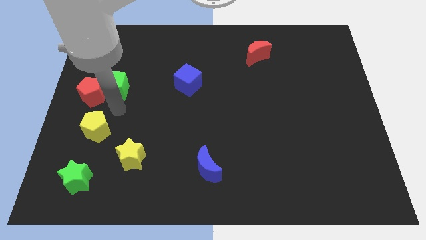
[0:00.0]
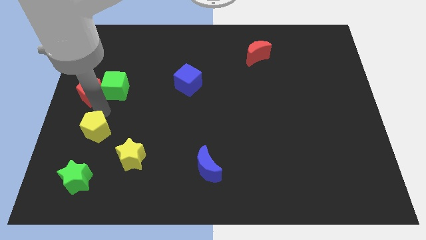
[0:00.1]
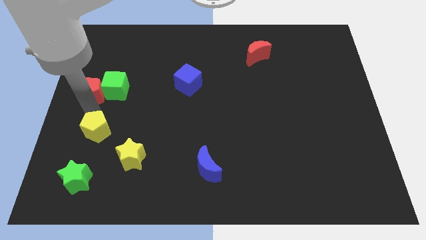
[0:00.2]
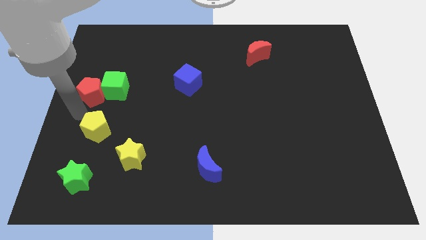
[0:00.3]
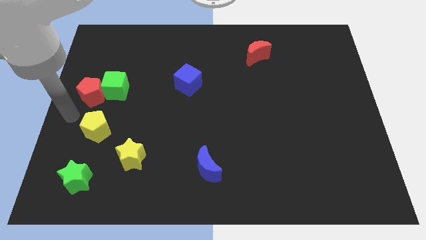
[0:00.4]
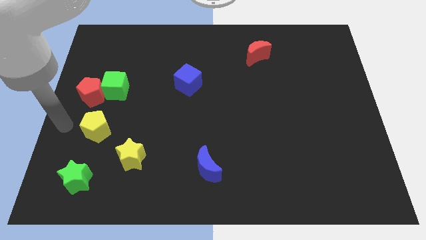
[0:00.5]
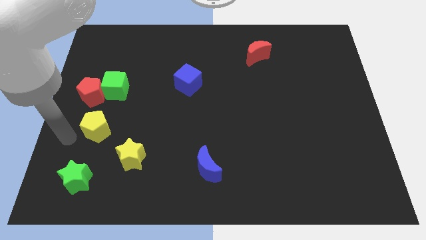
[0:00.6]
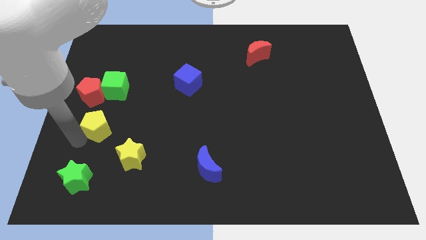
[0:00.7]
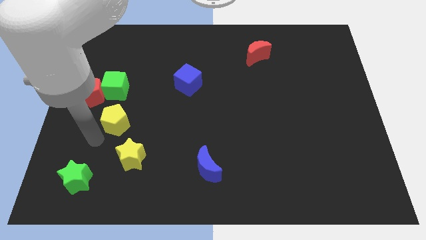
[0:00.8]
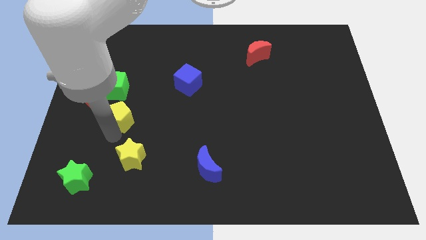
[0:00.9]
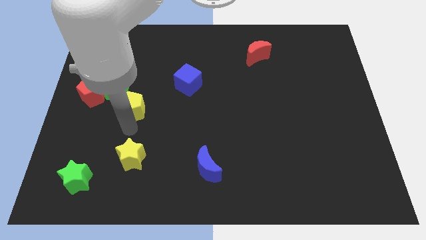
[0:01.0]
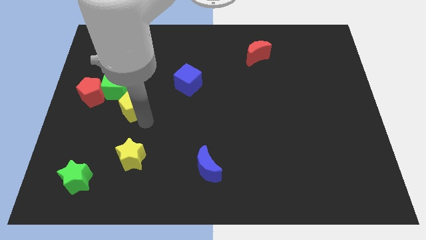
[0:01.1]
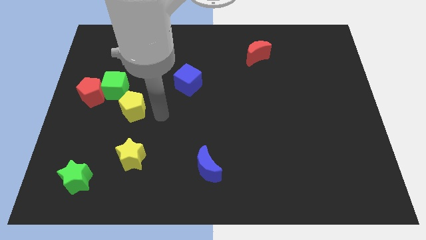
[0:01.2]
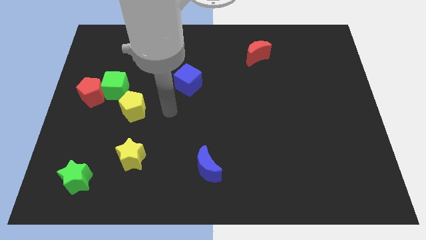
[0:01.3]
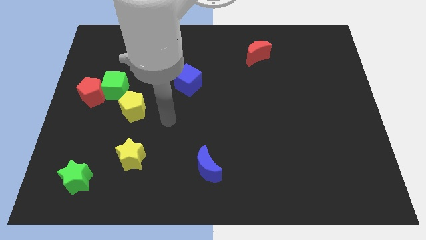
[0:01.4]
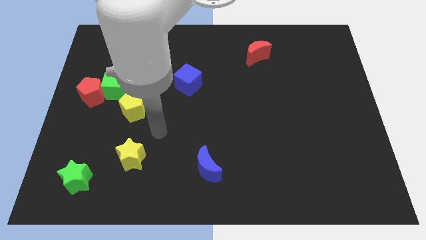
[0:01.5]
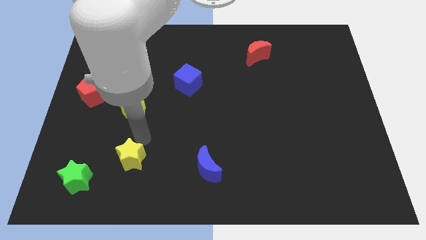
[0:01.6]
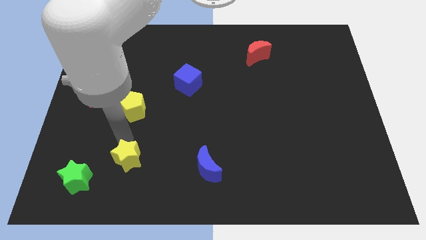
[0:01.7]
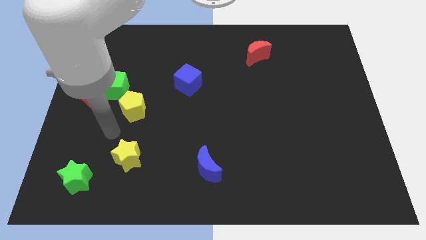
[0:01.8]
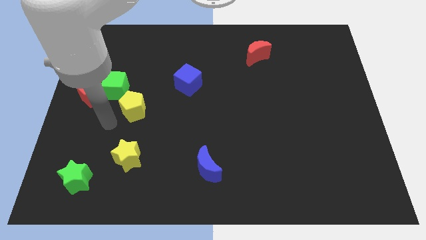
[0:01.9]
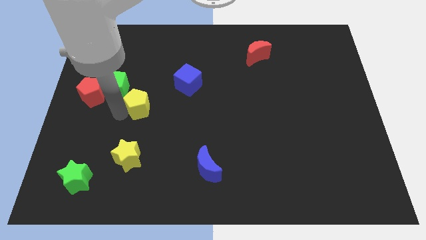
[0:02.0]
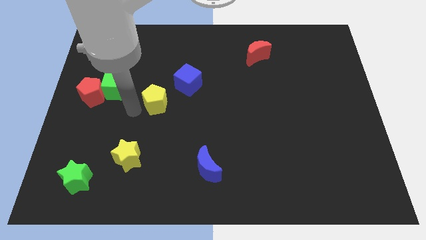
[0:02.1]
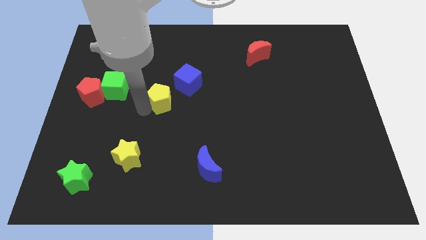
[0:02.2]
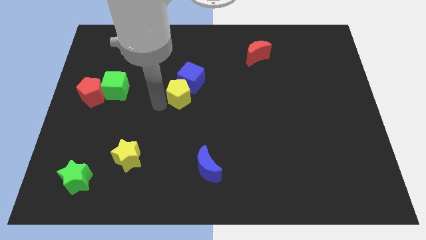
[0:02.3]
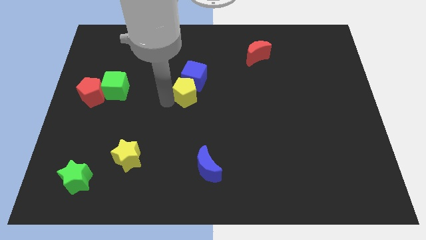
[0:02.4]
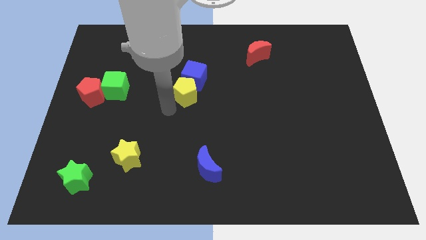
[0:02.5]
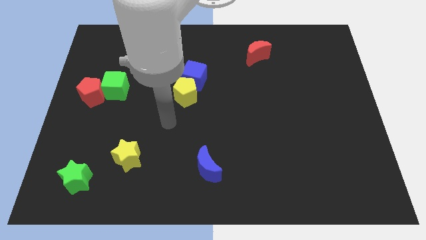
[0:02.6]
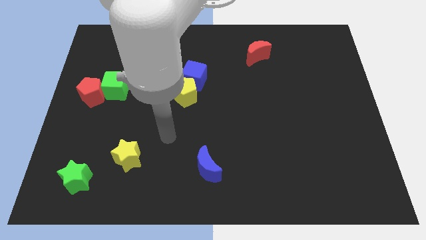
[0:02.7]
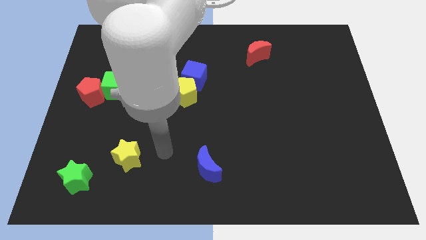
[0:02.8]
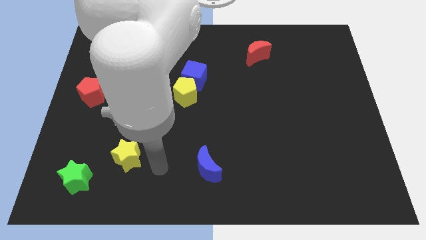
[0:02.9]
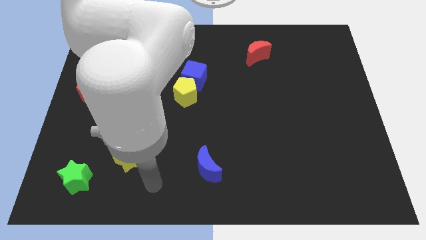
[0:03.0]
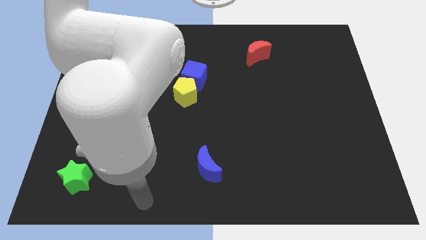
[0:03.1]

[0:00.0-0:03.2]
place the yellow pentagon below the blue cube

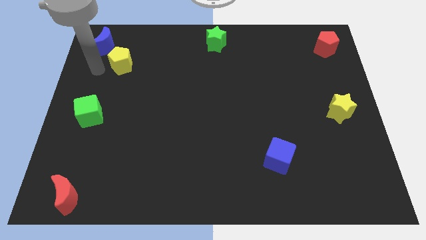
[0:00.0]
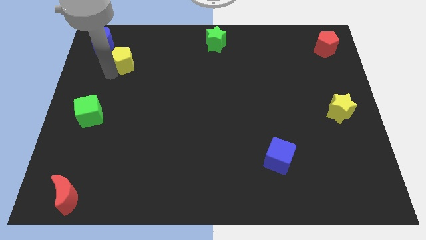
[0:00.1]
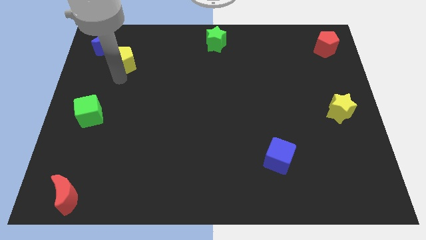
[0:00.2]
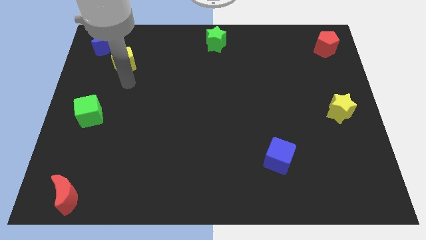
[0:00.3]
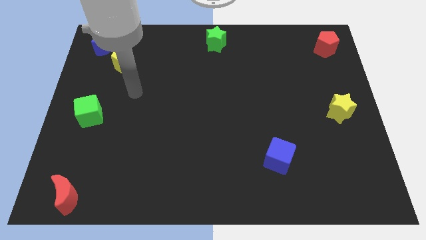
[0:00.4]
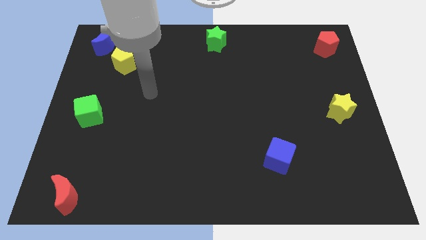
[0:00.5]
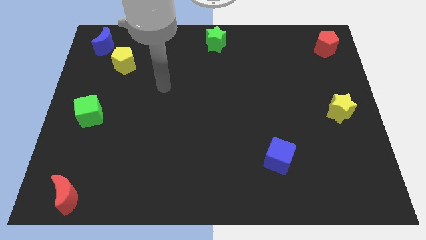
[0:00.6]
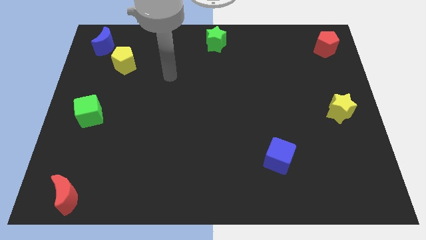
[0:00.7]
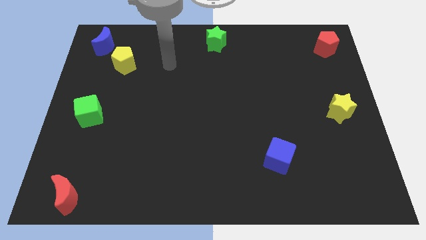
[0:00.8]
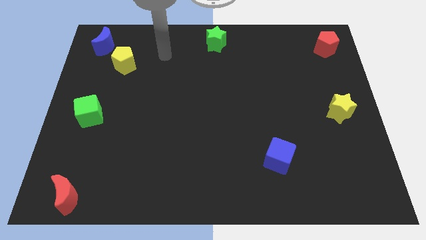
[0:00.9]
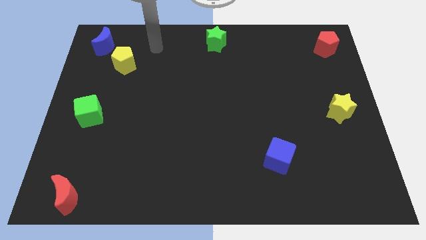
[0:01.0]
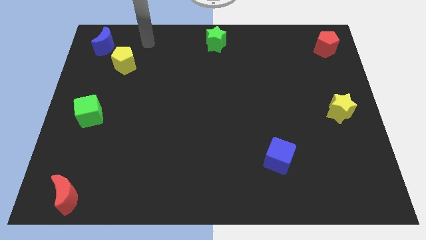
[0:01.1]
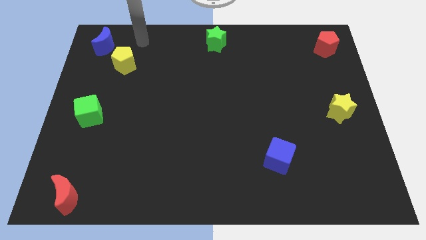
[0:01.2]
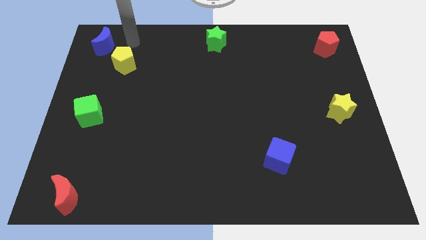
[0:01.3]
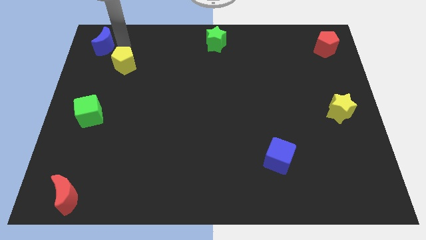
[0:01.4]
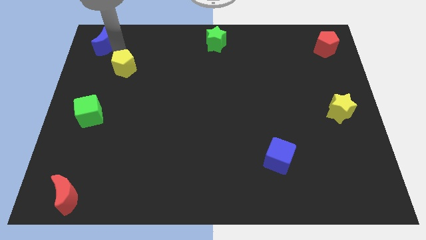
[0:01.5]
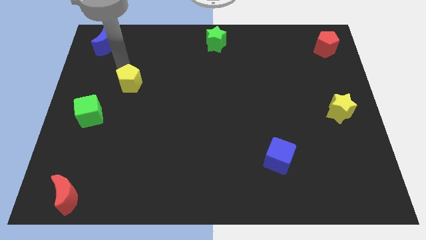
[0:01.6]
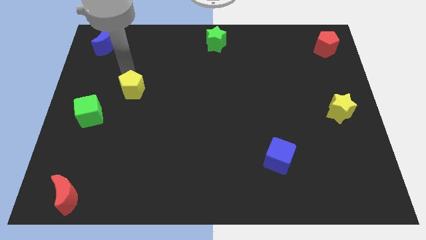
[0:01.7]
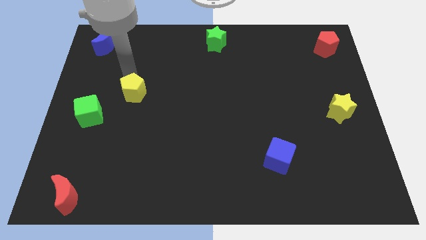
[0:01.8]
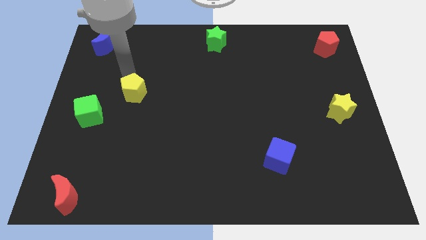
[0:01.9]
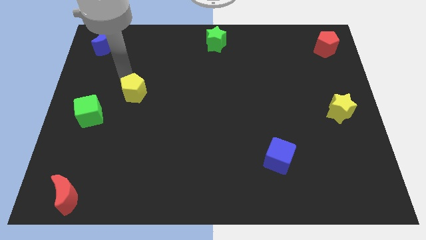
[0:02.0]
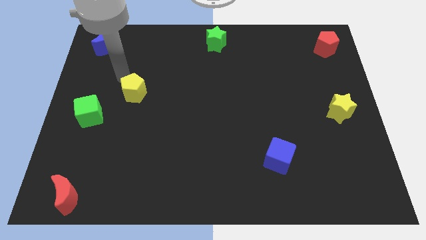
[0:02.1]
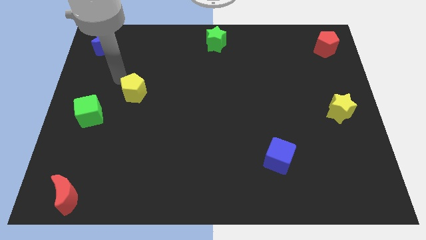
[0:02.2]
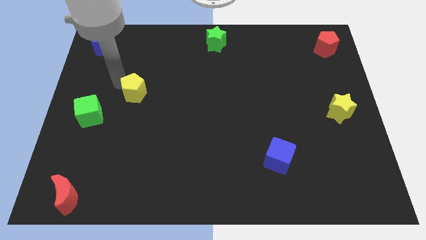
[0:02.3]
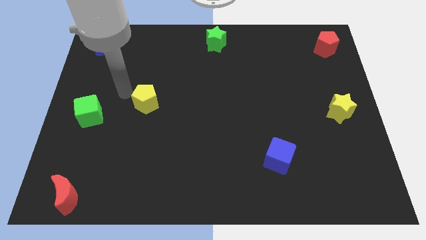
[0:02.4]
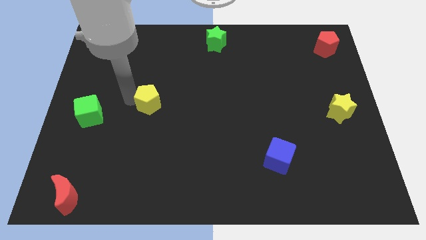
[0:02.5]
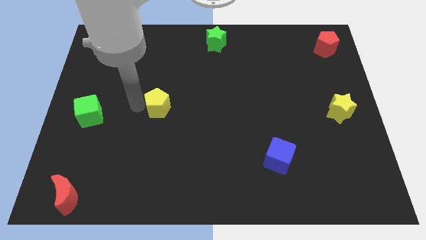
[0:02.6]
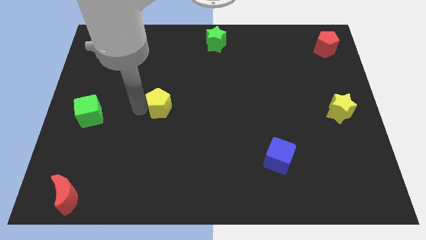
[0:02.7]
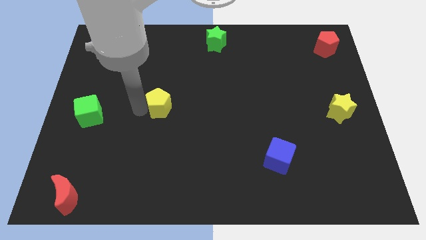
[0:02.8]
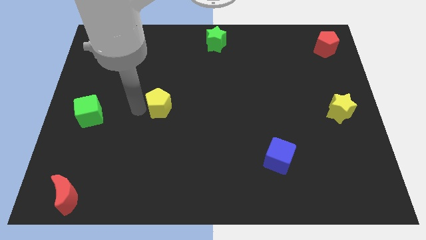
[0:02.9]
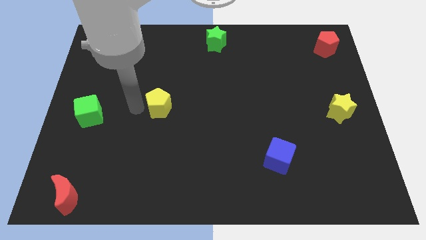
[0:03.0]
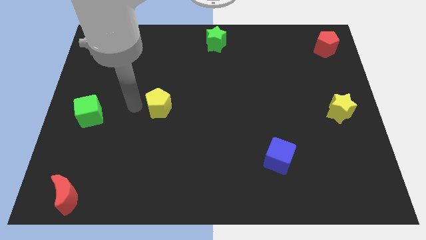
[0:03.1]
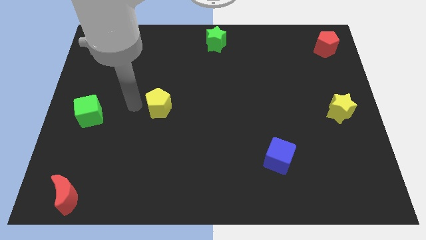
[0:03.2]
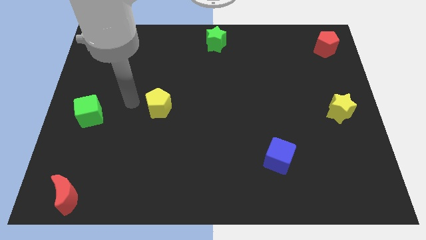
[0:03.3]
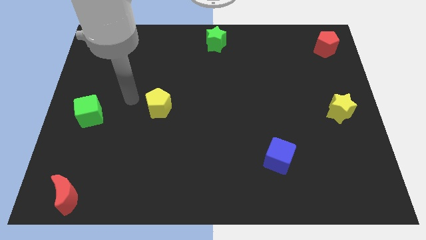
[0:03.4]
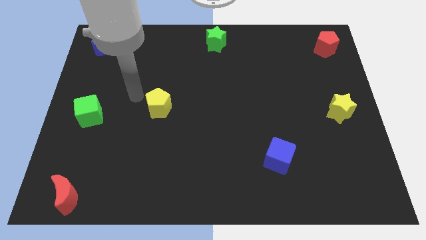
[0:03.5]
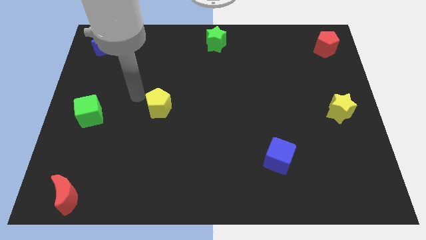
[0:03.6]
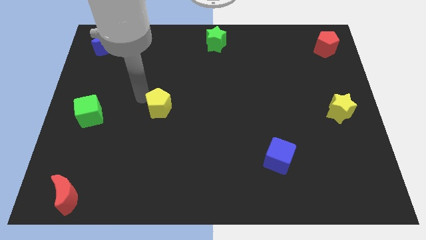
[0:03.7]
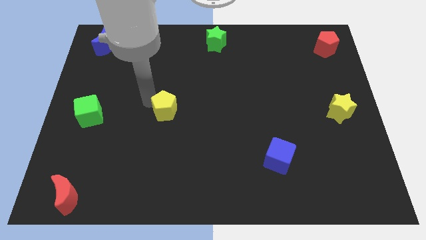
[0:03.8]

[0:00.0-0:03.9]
place yellow pentagon parallel to green cube

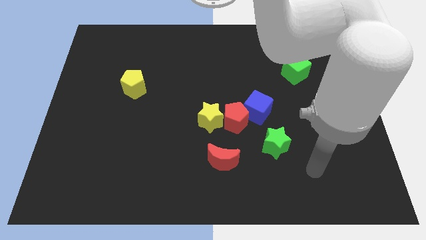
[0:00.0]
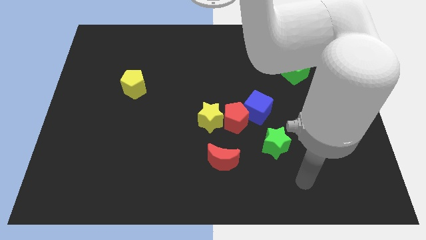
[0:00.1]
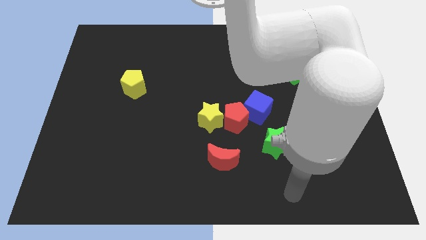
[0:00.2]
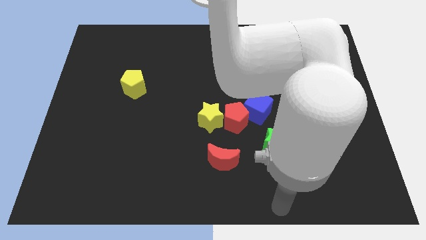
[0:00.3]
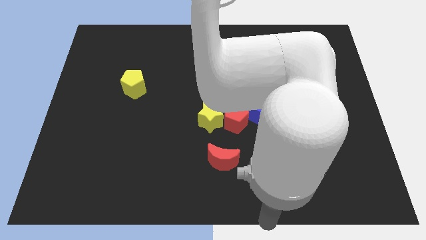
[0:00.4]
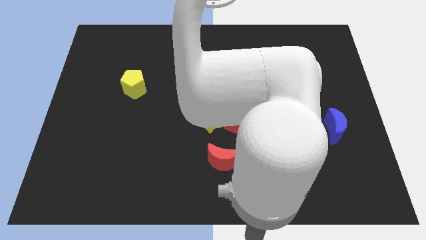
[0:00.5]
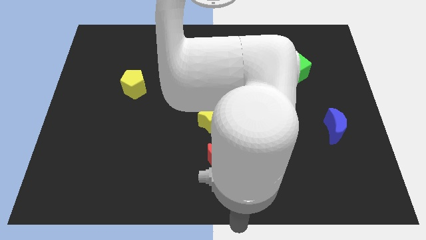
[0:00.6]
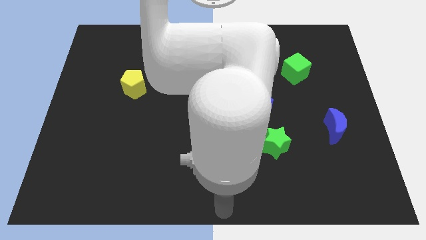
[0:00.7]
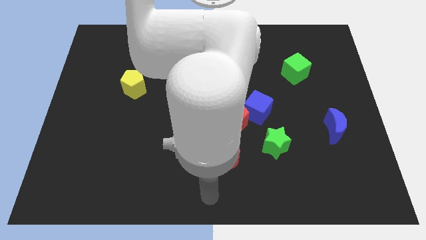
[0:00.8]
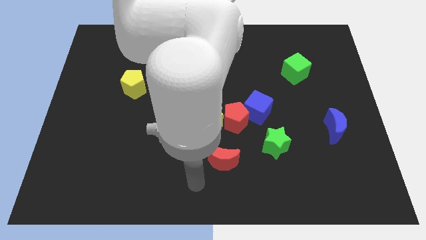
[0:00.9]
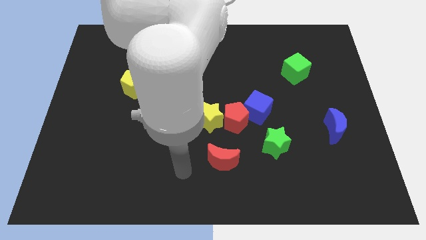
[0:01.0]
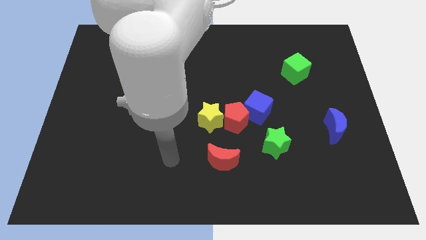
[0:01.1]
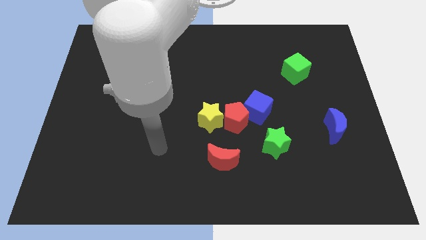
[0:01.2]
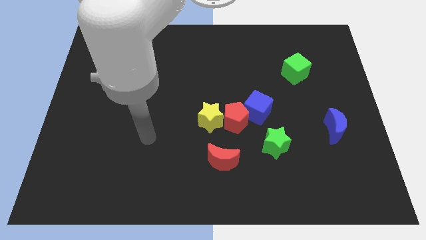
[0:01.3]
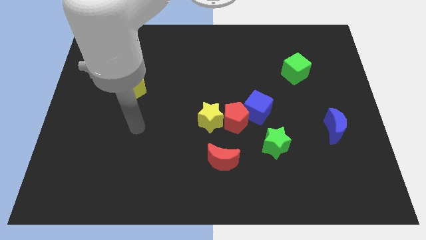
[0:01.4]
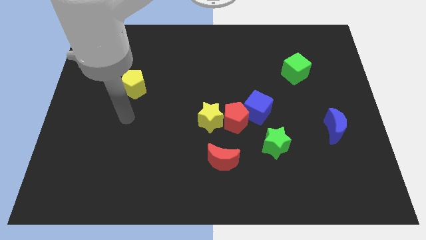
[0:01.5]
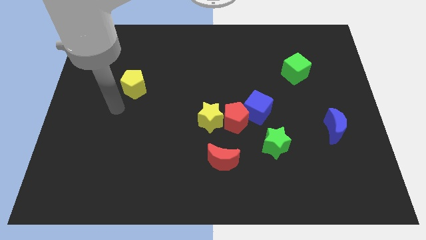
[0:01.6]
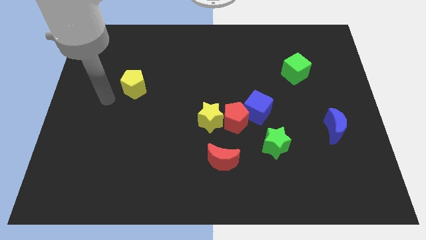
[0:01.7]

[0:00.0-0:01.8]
move your arm towards the yellow pentagon
